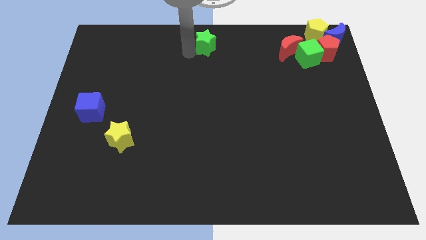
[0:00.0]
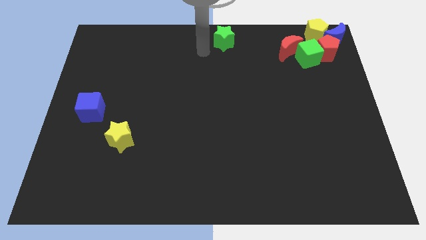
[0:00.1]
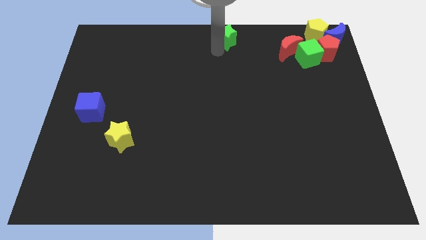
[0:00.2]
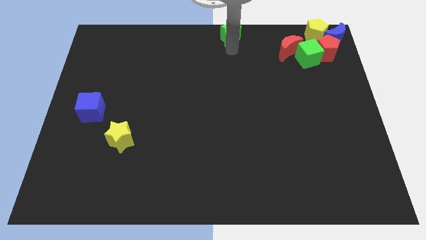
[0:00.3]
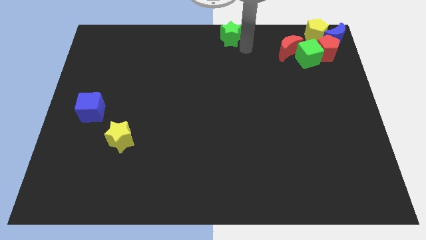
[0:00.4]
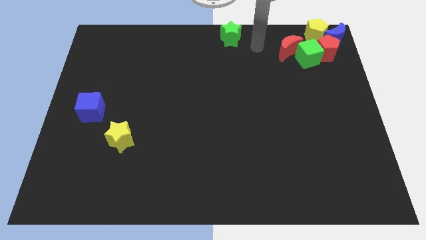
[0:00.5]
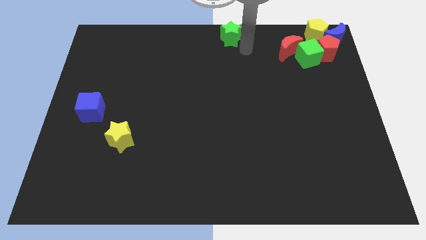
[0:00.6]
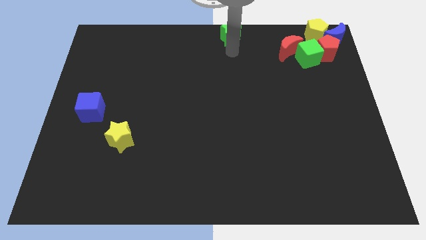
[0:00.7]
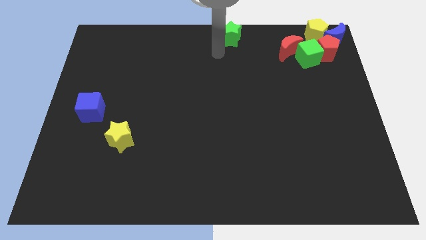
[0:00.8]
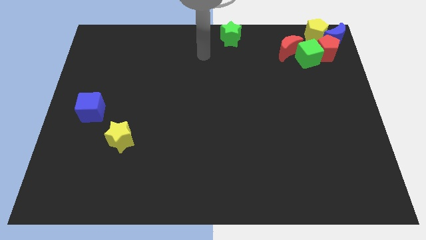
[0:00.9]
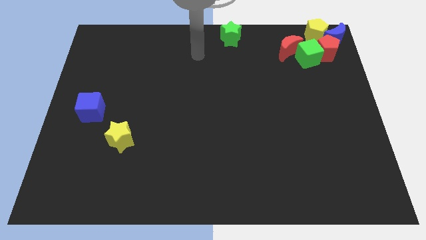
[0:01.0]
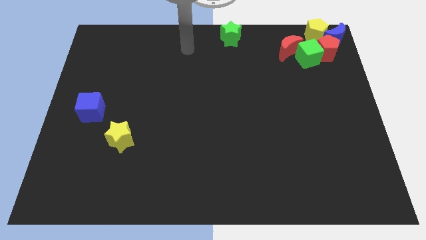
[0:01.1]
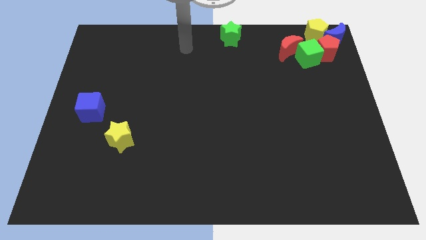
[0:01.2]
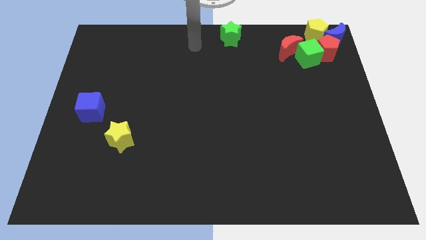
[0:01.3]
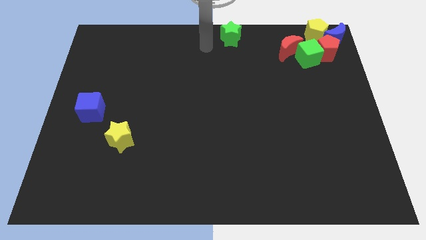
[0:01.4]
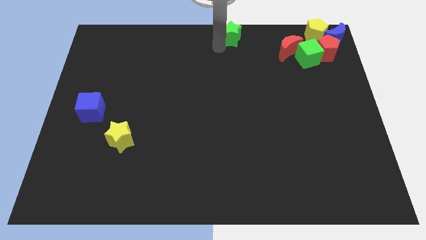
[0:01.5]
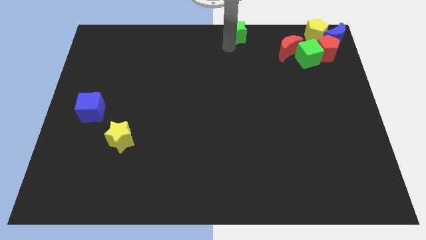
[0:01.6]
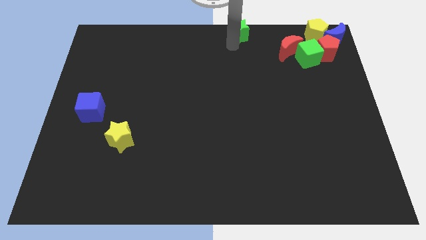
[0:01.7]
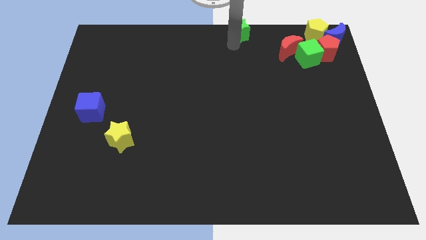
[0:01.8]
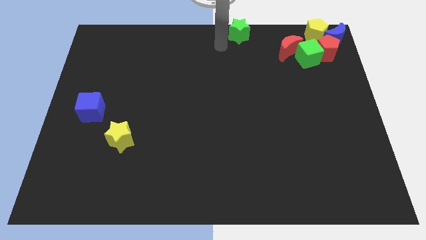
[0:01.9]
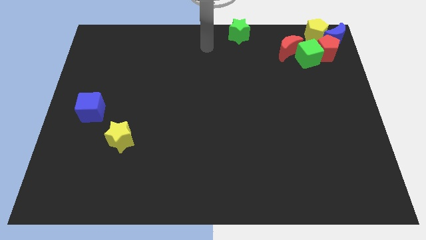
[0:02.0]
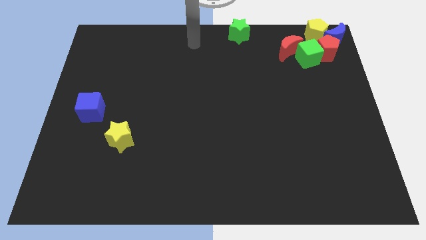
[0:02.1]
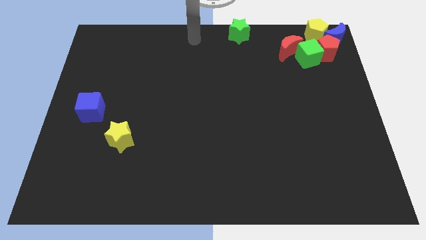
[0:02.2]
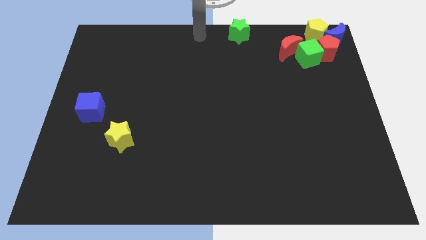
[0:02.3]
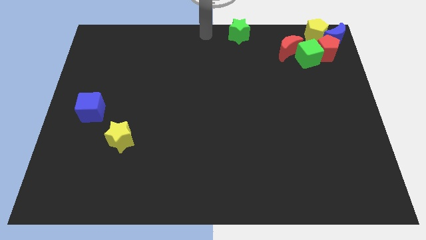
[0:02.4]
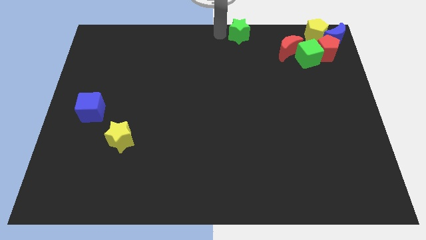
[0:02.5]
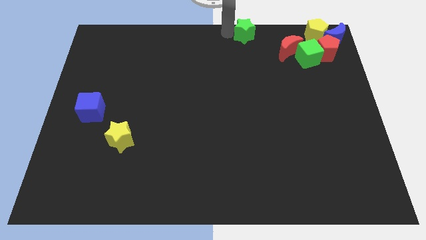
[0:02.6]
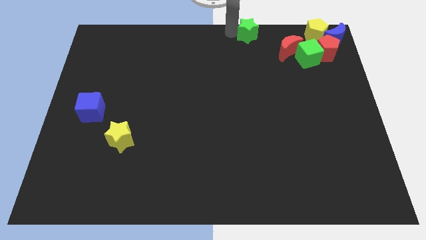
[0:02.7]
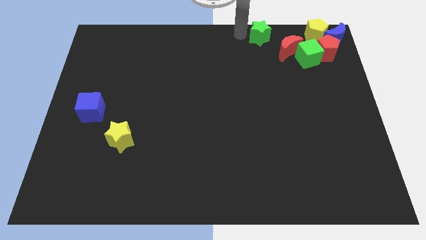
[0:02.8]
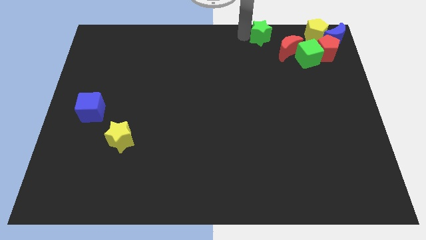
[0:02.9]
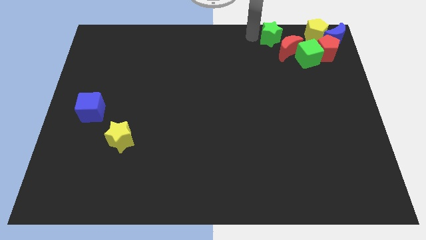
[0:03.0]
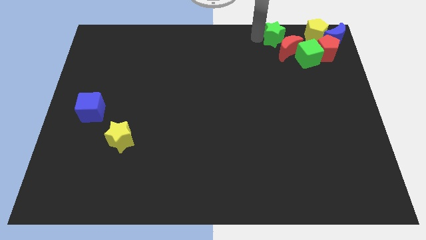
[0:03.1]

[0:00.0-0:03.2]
move the green star left to the yellow pentagon

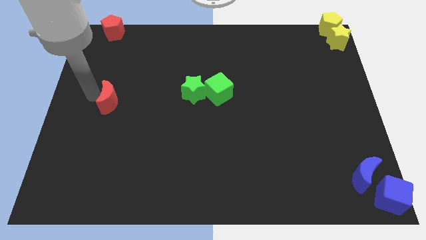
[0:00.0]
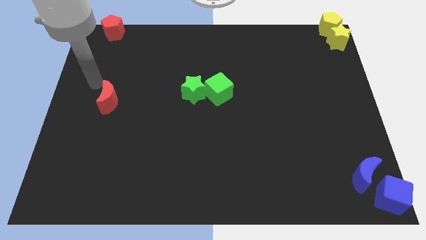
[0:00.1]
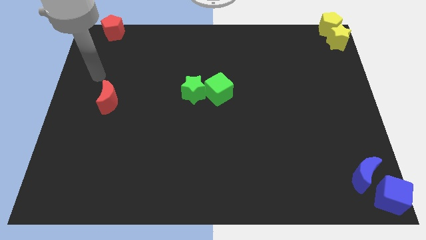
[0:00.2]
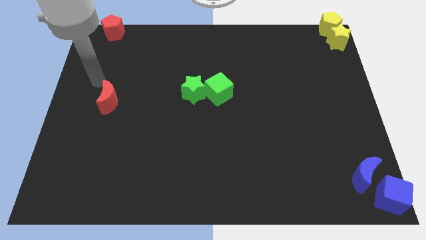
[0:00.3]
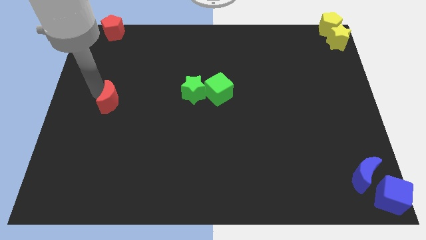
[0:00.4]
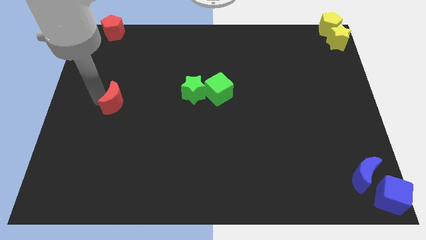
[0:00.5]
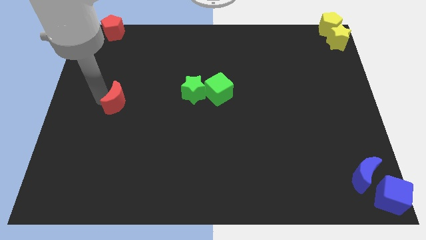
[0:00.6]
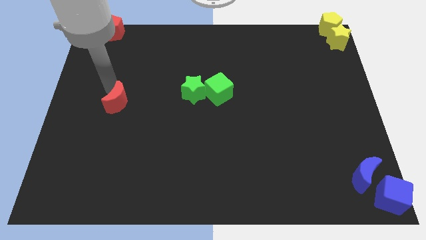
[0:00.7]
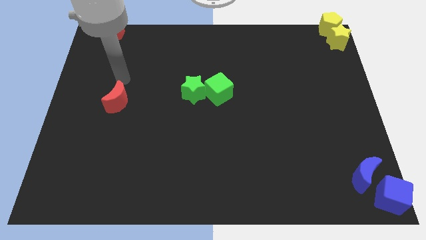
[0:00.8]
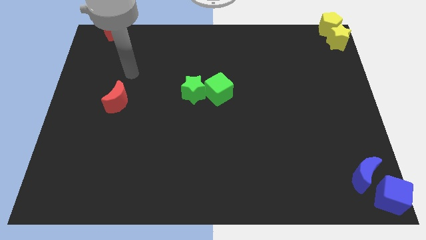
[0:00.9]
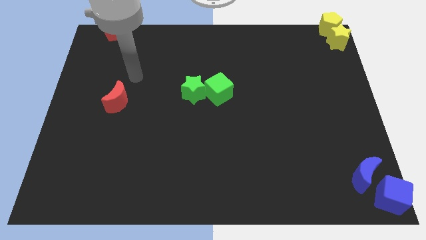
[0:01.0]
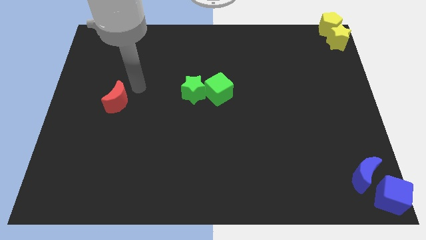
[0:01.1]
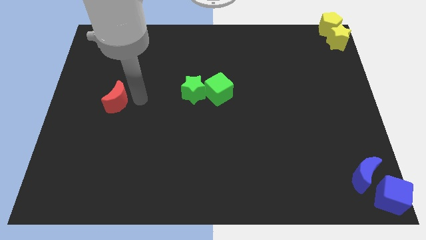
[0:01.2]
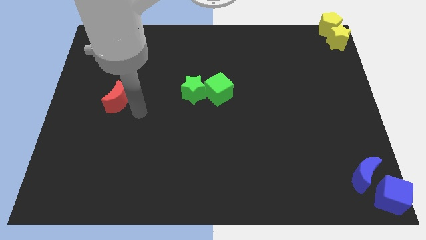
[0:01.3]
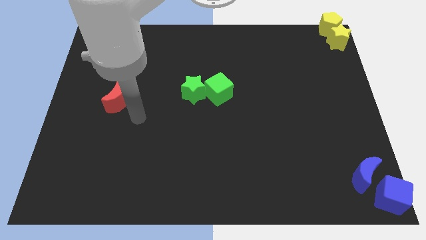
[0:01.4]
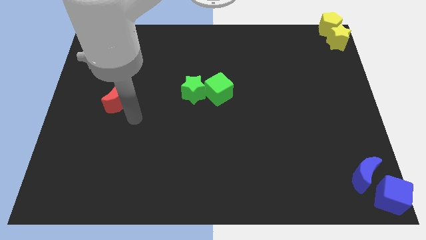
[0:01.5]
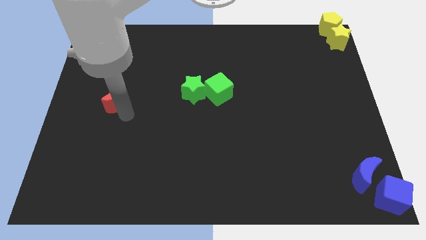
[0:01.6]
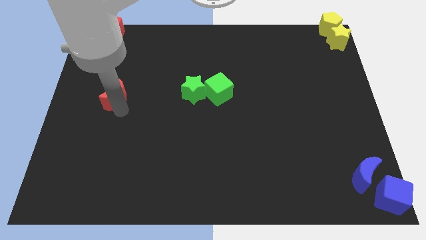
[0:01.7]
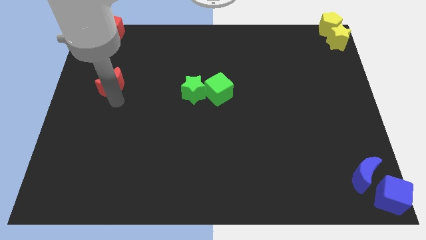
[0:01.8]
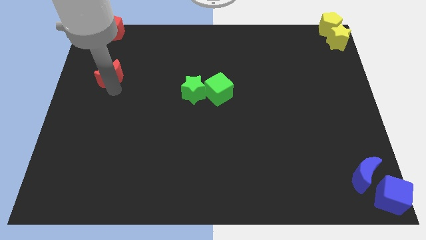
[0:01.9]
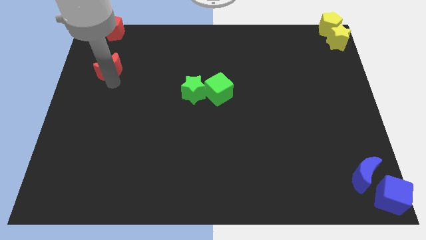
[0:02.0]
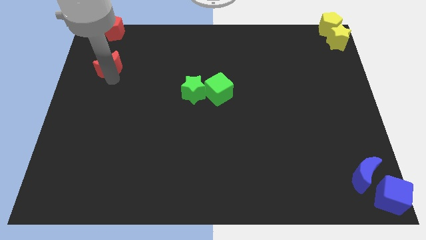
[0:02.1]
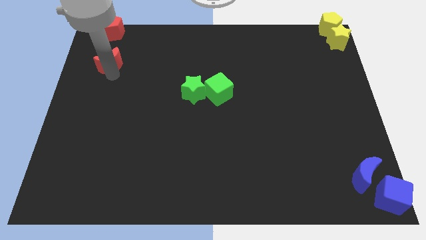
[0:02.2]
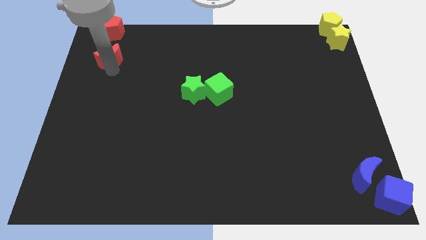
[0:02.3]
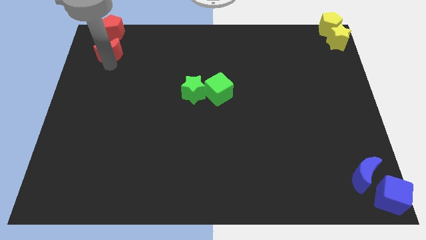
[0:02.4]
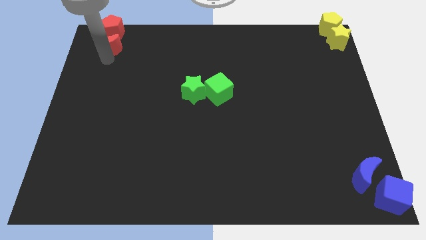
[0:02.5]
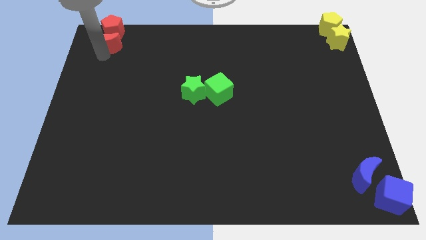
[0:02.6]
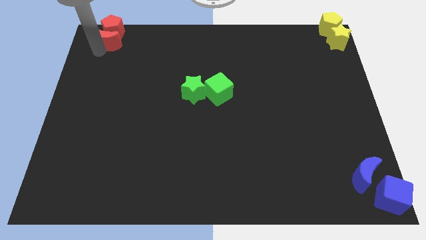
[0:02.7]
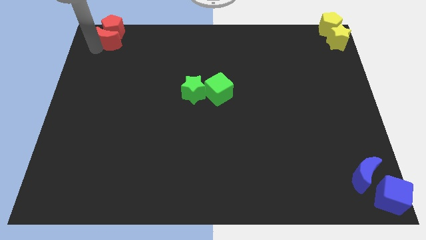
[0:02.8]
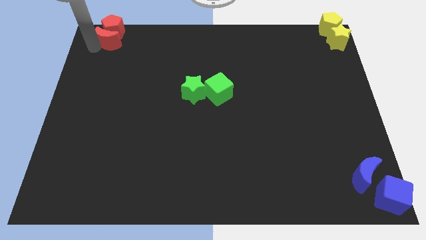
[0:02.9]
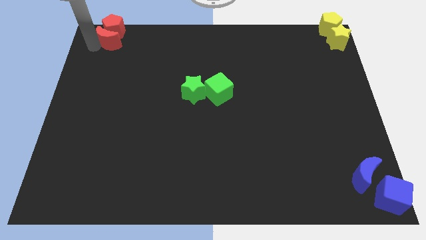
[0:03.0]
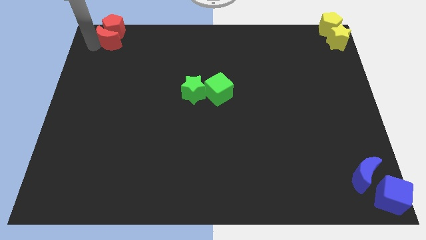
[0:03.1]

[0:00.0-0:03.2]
move red crescent towards red pentagon

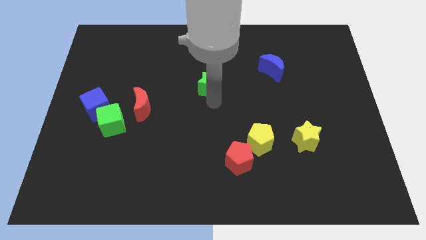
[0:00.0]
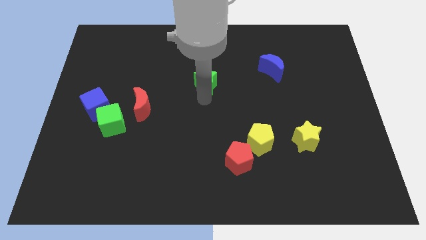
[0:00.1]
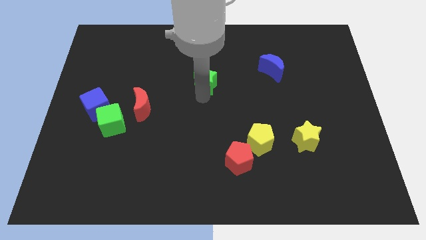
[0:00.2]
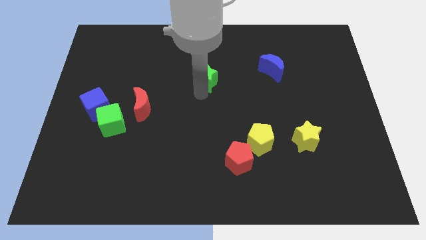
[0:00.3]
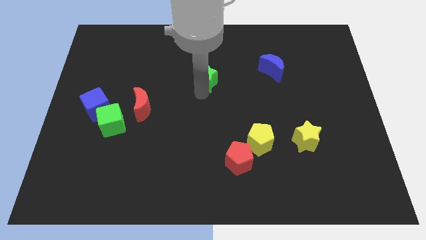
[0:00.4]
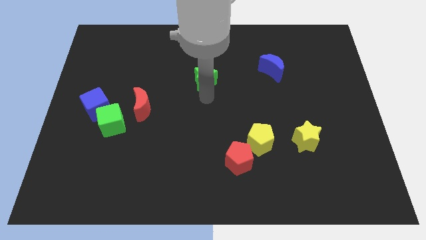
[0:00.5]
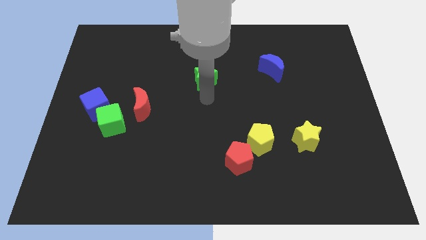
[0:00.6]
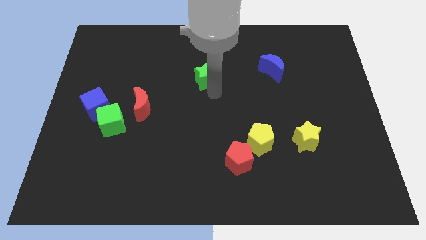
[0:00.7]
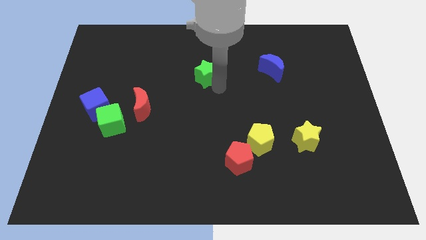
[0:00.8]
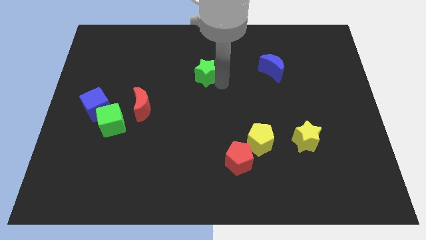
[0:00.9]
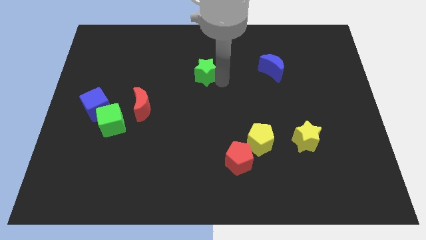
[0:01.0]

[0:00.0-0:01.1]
move green star to the left of blue moon

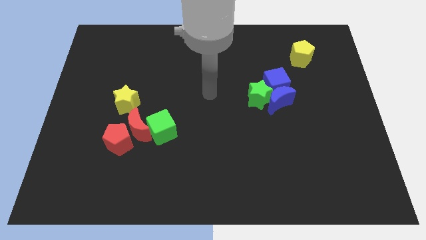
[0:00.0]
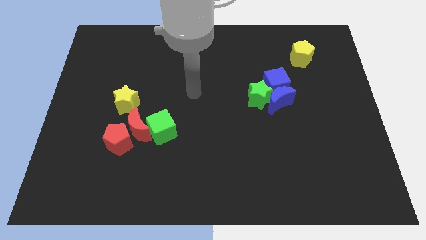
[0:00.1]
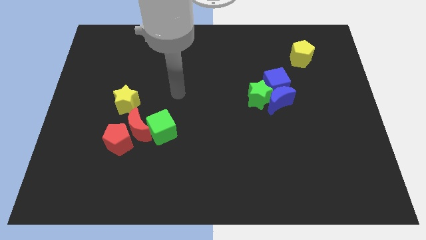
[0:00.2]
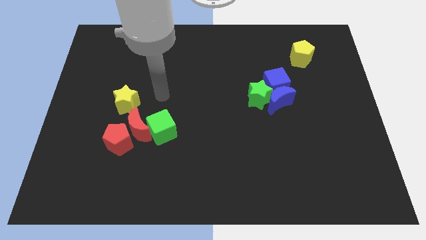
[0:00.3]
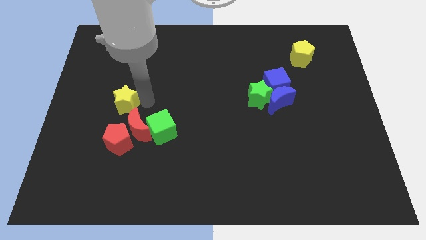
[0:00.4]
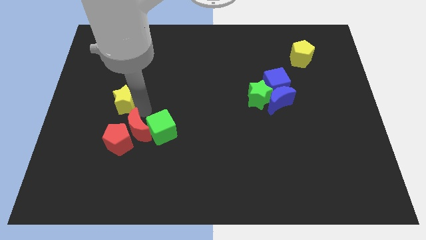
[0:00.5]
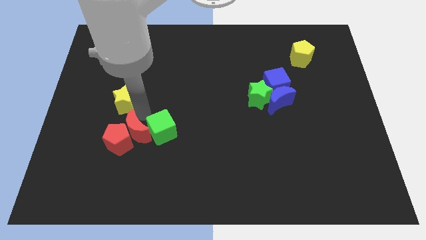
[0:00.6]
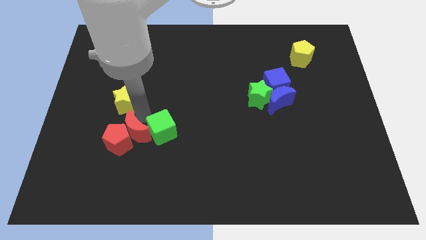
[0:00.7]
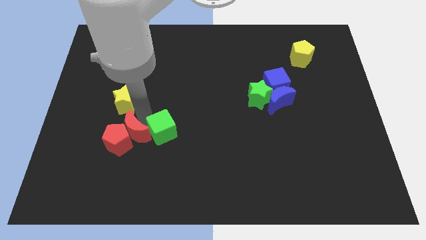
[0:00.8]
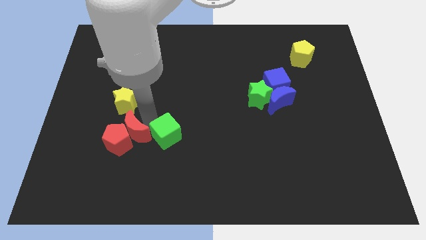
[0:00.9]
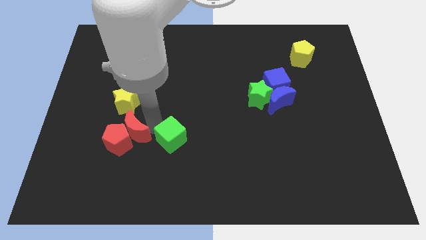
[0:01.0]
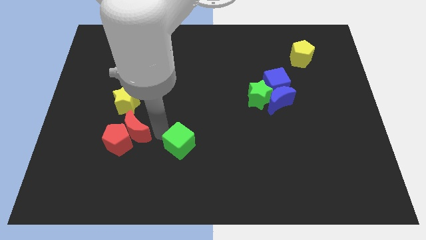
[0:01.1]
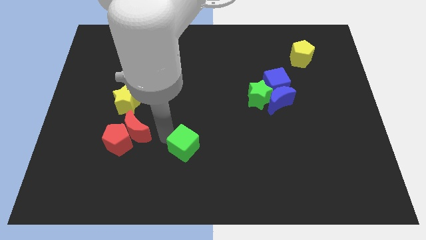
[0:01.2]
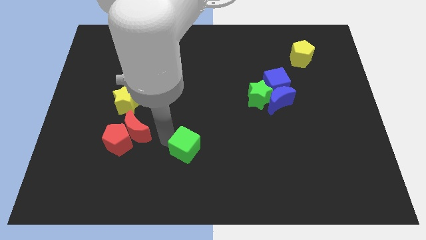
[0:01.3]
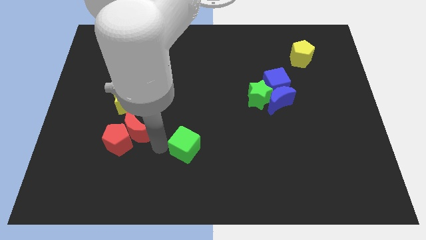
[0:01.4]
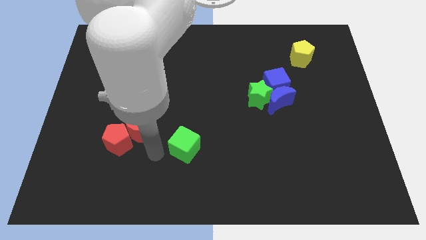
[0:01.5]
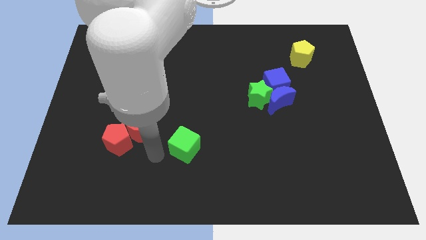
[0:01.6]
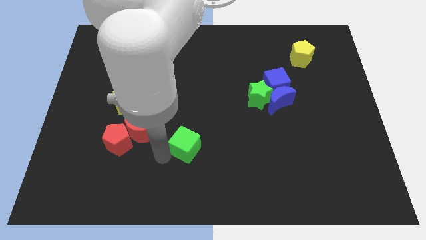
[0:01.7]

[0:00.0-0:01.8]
separate the green cube from the red moon
